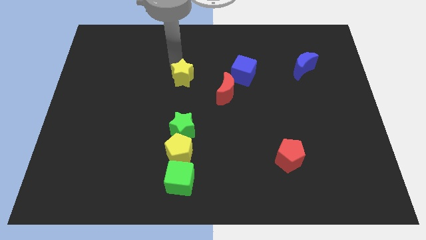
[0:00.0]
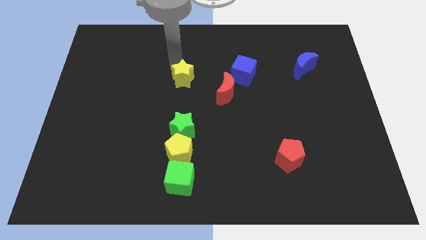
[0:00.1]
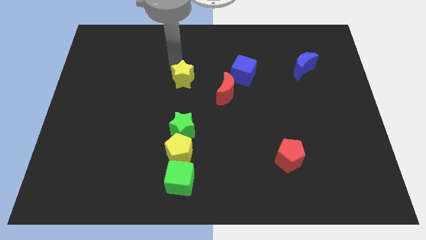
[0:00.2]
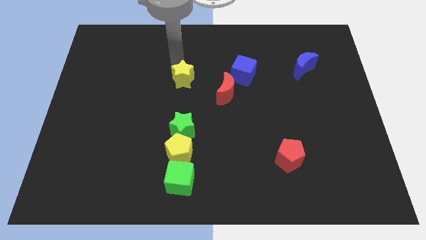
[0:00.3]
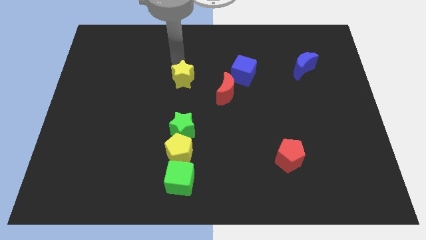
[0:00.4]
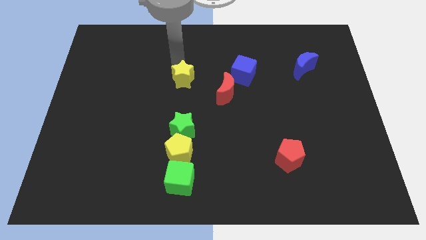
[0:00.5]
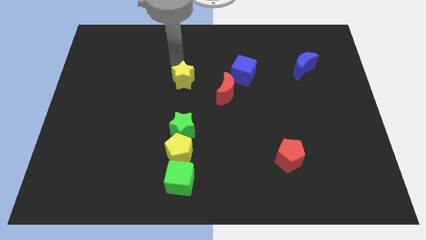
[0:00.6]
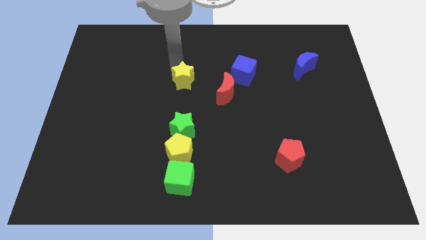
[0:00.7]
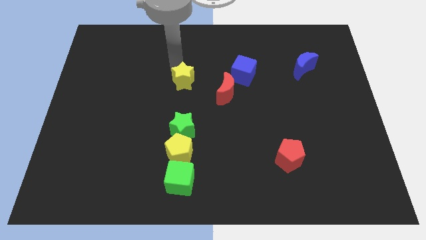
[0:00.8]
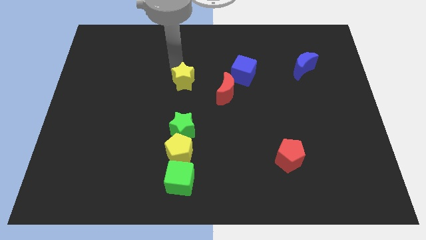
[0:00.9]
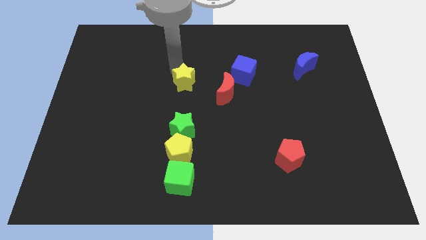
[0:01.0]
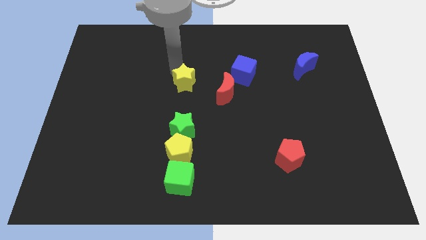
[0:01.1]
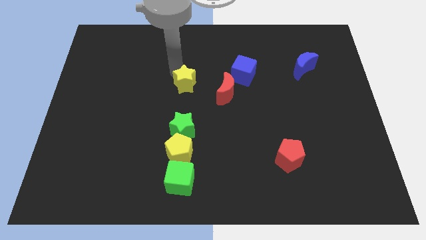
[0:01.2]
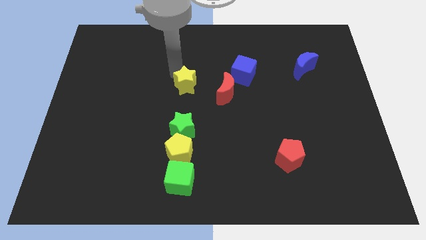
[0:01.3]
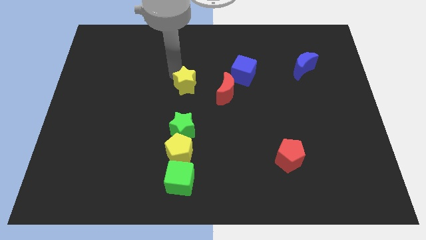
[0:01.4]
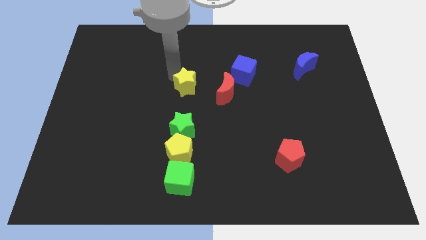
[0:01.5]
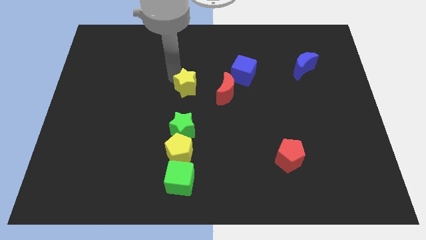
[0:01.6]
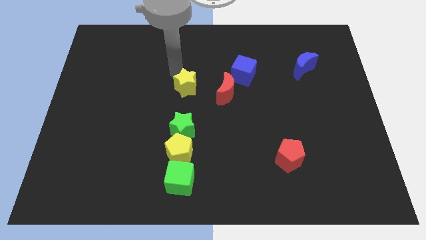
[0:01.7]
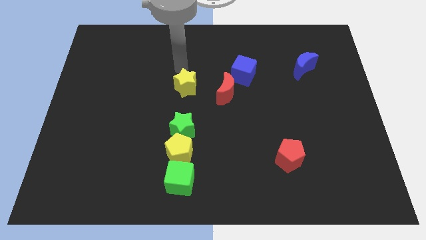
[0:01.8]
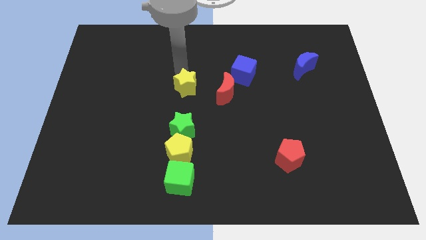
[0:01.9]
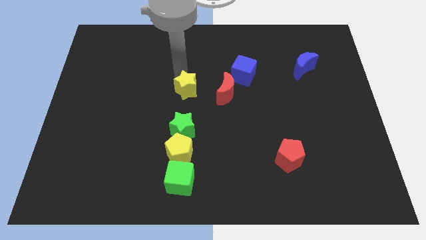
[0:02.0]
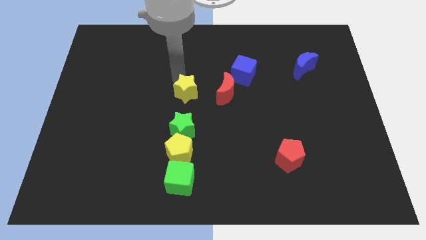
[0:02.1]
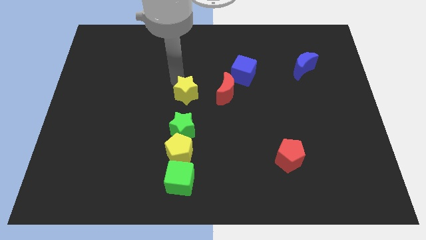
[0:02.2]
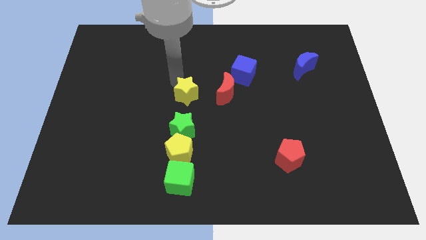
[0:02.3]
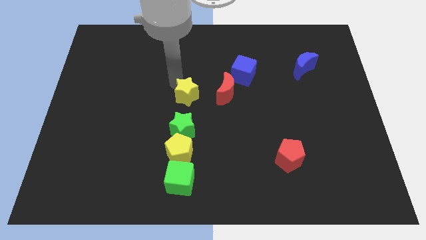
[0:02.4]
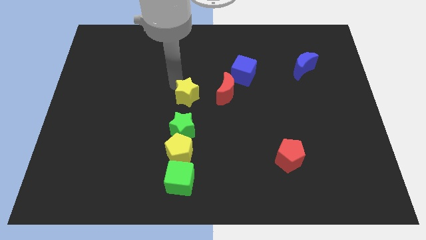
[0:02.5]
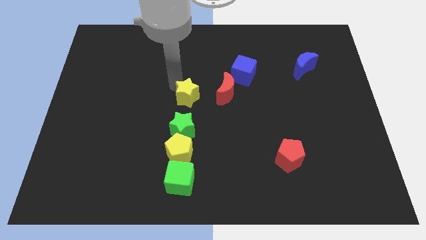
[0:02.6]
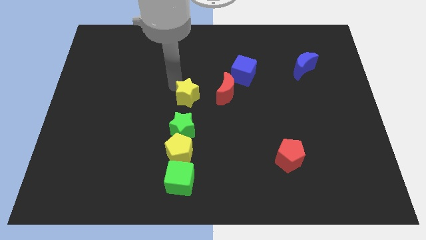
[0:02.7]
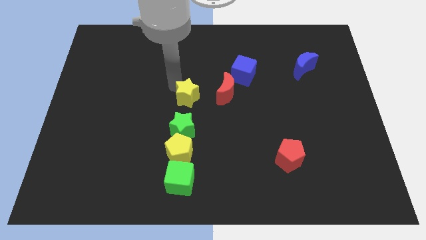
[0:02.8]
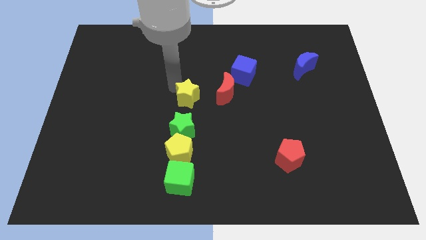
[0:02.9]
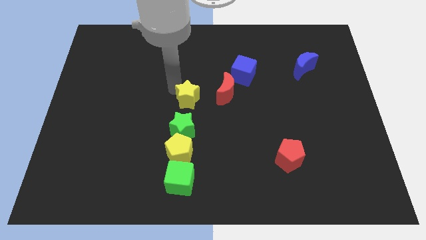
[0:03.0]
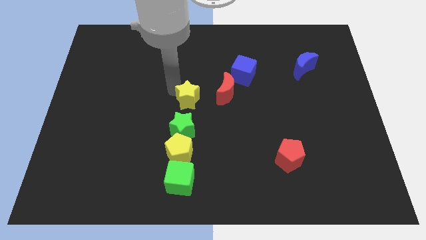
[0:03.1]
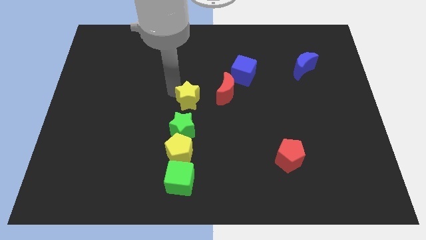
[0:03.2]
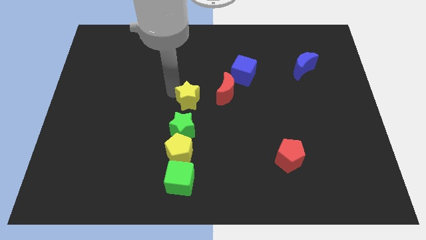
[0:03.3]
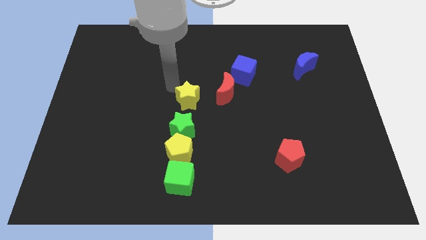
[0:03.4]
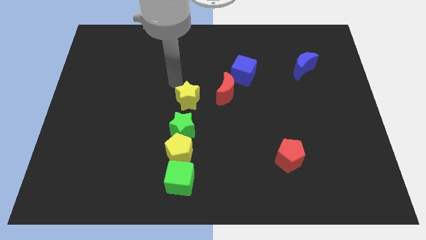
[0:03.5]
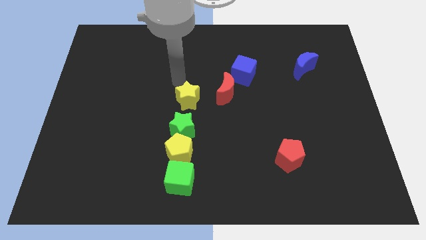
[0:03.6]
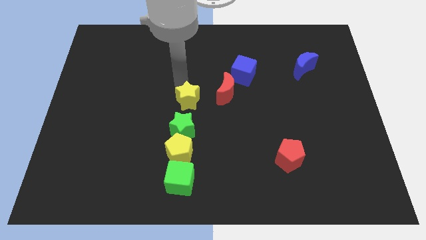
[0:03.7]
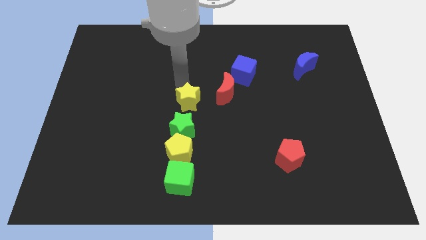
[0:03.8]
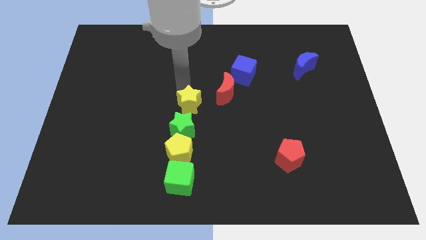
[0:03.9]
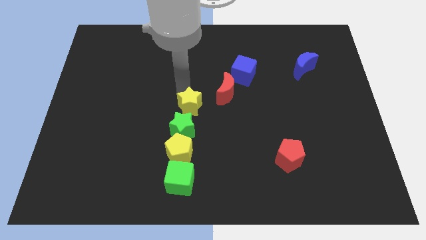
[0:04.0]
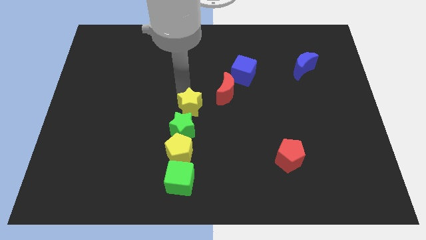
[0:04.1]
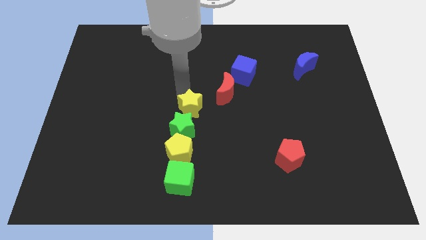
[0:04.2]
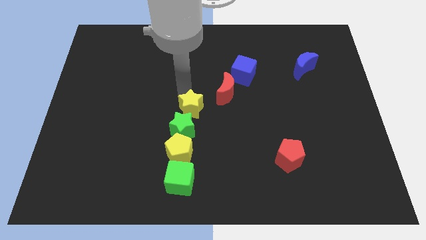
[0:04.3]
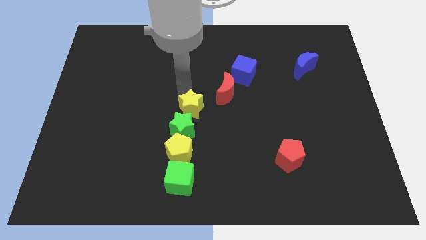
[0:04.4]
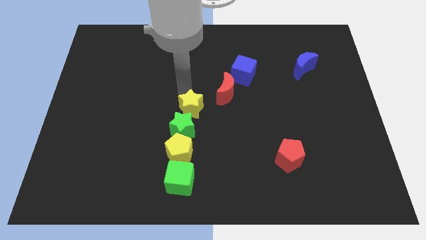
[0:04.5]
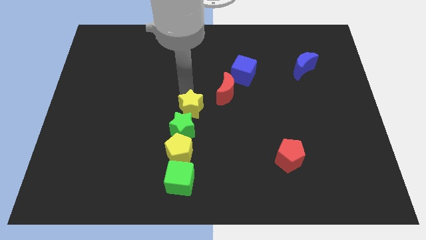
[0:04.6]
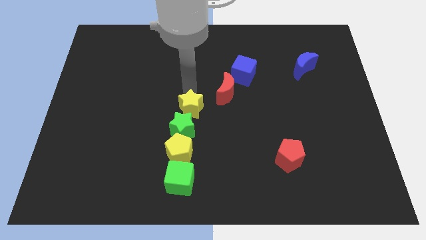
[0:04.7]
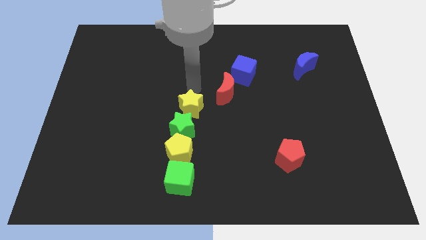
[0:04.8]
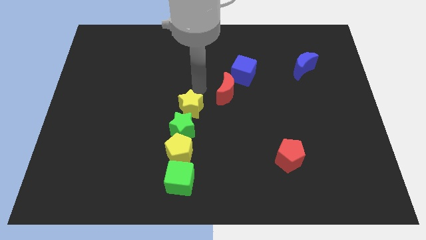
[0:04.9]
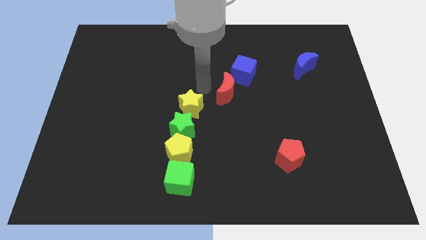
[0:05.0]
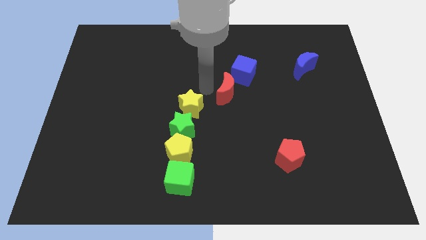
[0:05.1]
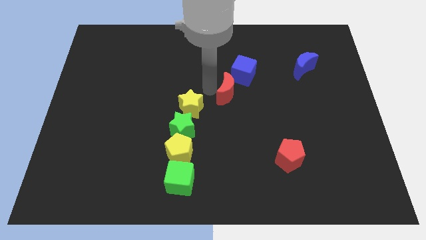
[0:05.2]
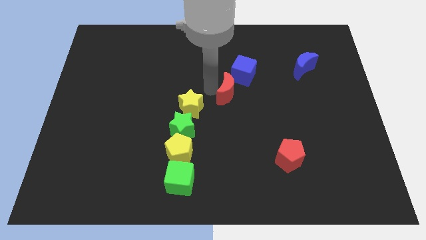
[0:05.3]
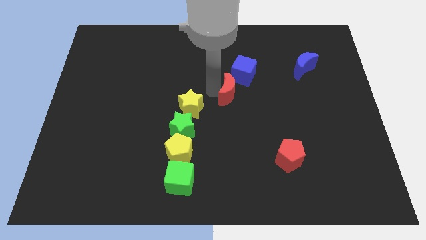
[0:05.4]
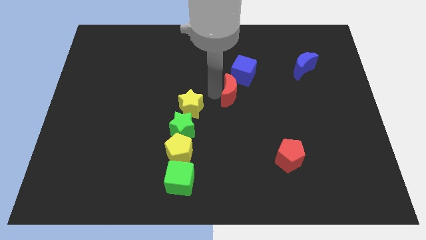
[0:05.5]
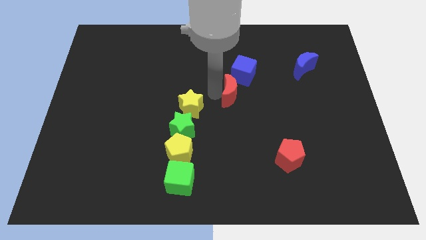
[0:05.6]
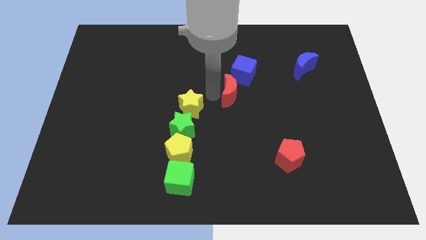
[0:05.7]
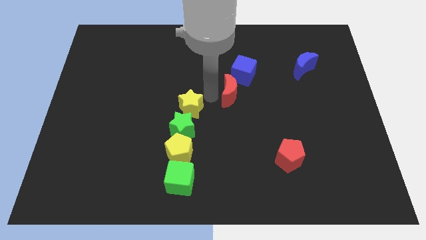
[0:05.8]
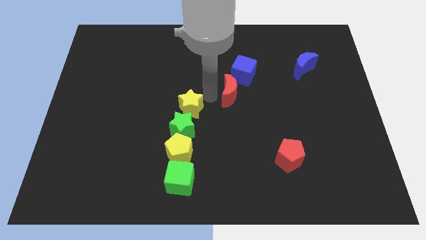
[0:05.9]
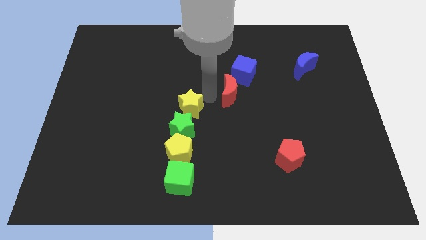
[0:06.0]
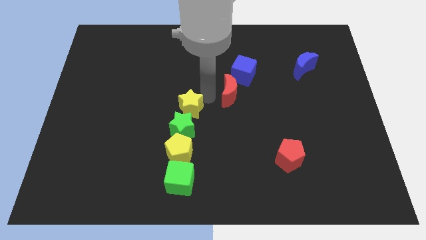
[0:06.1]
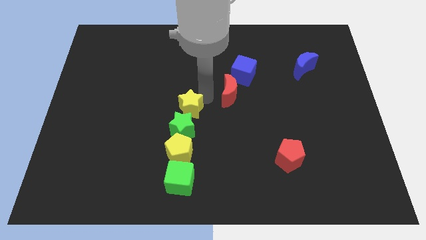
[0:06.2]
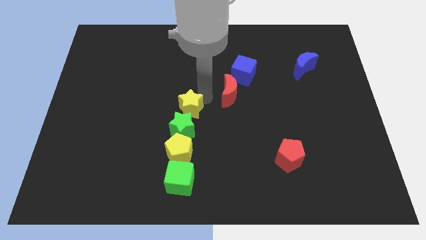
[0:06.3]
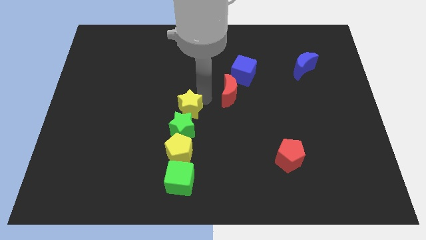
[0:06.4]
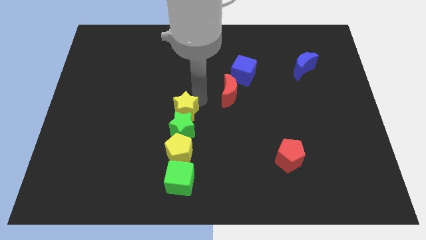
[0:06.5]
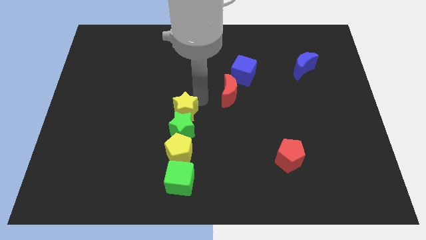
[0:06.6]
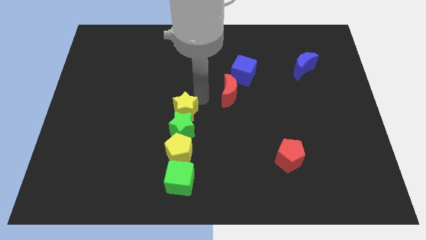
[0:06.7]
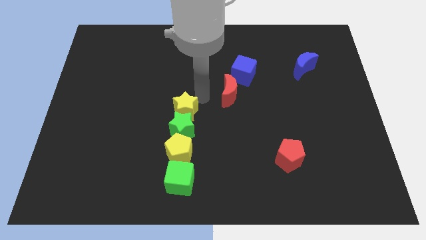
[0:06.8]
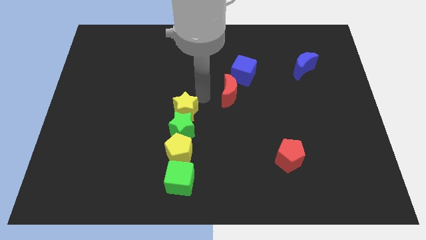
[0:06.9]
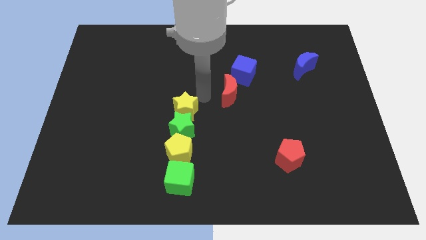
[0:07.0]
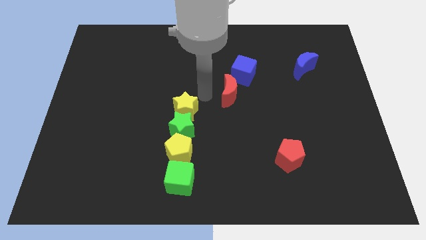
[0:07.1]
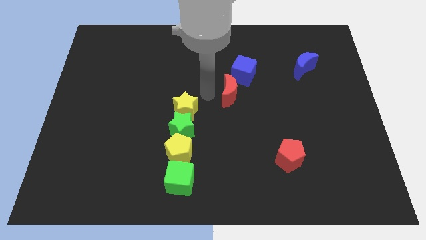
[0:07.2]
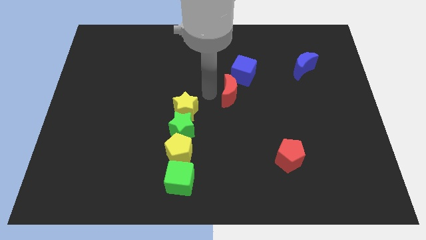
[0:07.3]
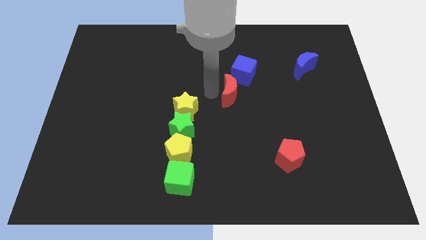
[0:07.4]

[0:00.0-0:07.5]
move the yellow star to the top of the green star

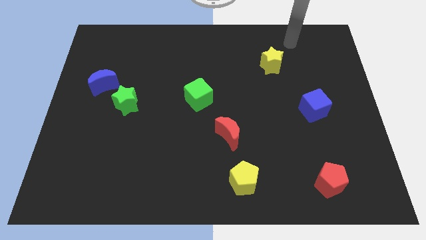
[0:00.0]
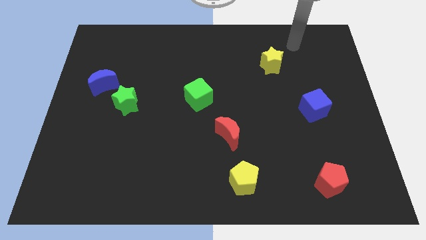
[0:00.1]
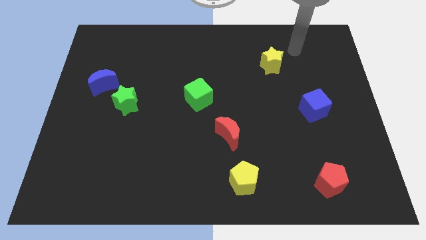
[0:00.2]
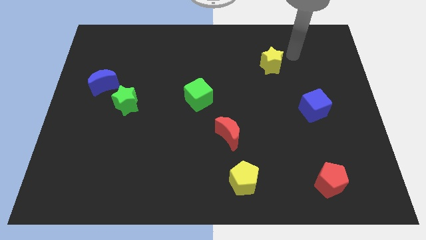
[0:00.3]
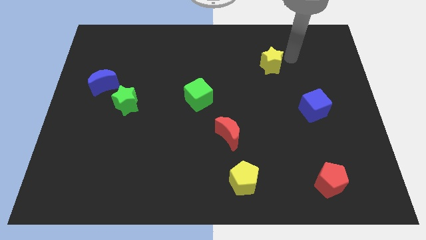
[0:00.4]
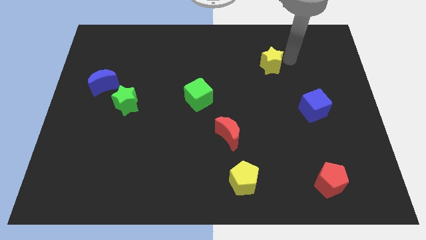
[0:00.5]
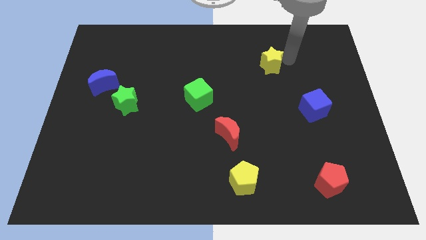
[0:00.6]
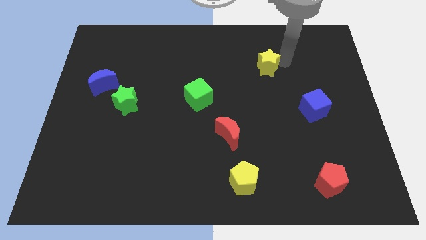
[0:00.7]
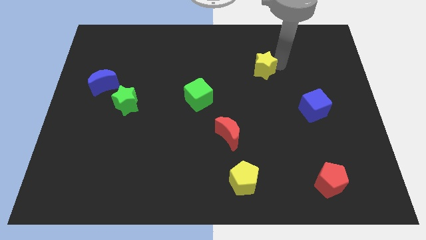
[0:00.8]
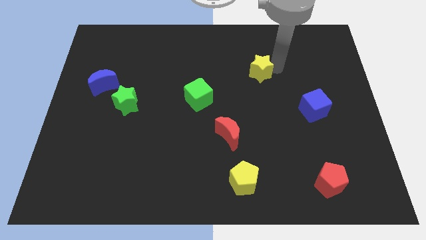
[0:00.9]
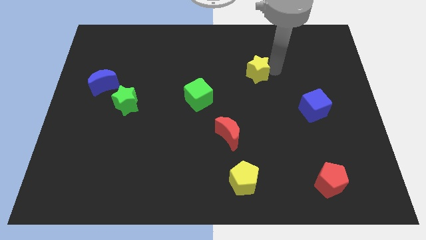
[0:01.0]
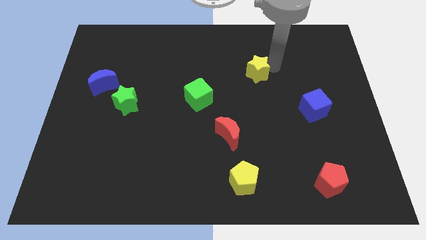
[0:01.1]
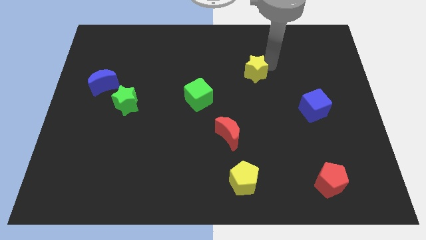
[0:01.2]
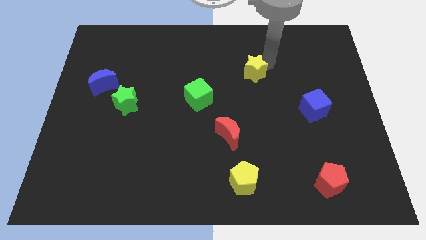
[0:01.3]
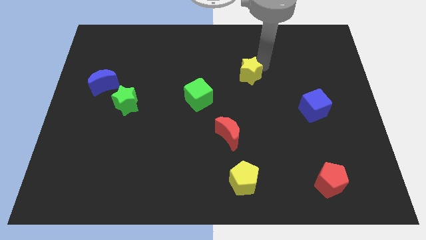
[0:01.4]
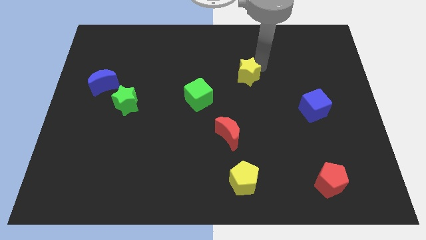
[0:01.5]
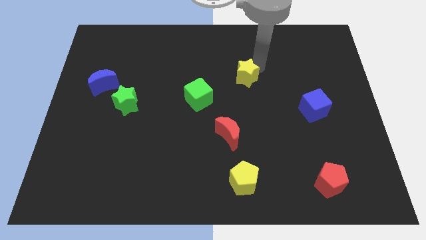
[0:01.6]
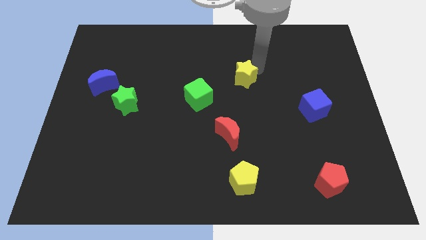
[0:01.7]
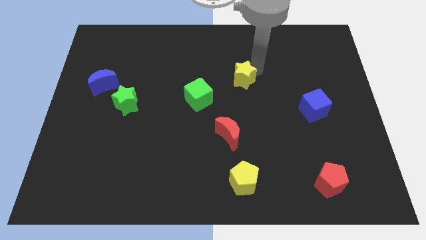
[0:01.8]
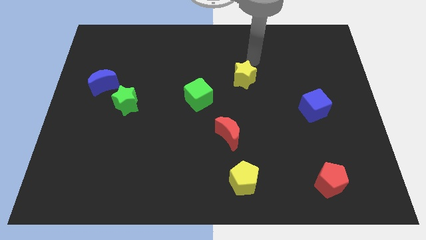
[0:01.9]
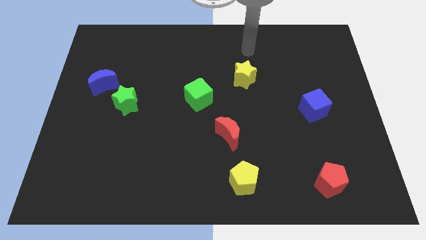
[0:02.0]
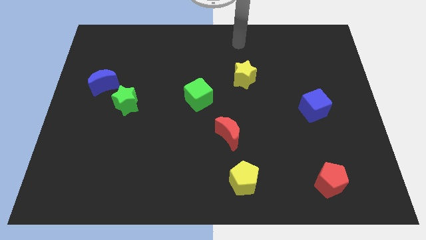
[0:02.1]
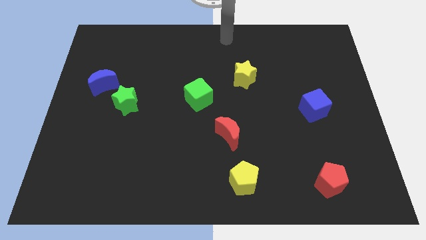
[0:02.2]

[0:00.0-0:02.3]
move the yellow star downwards to the top right of green cube
